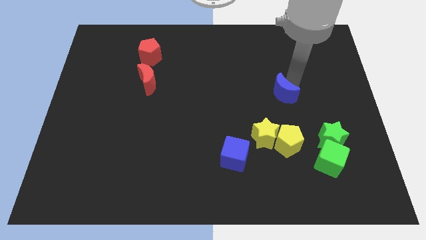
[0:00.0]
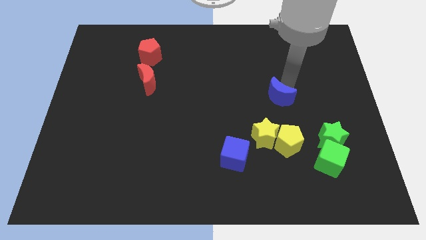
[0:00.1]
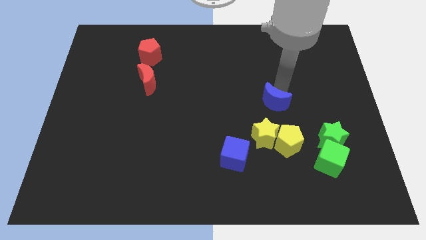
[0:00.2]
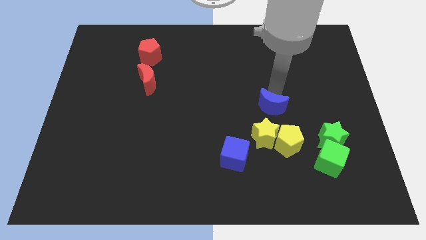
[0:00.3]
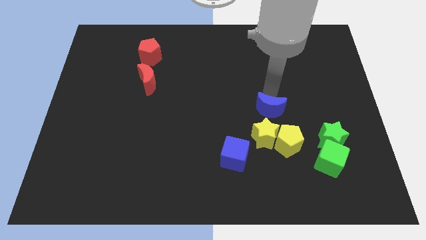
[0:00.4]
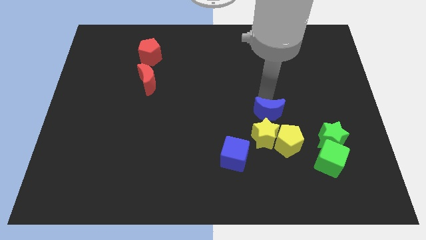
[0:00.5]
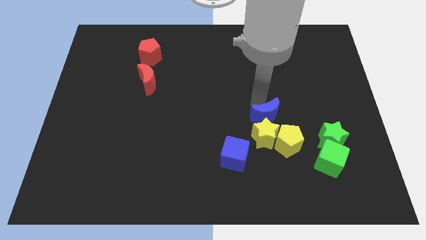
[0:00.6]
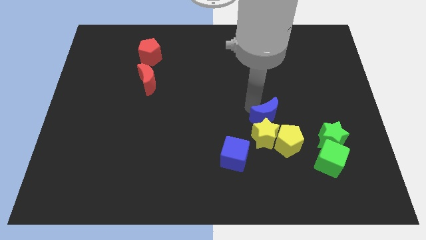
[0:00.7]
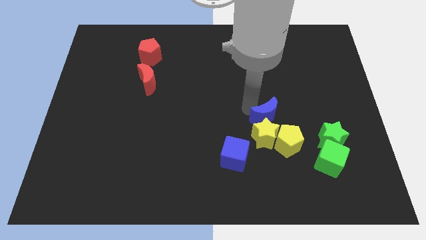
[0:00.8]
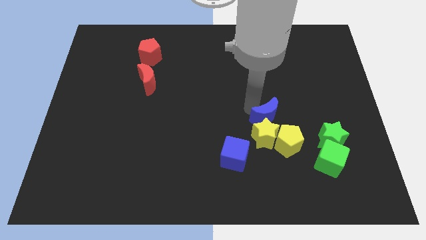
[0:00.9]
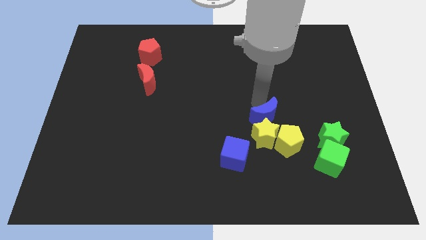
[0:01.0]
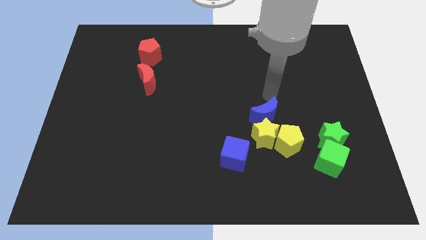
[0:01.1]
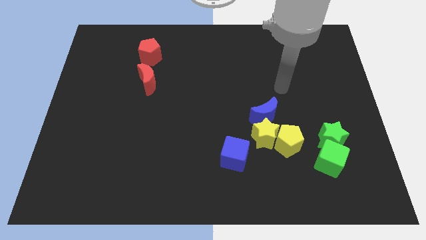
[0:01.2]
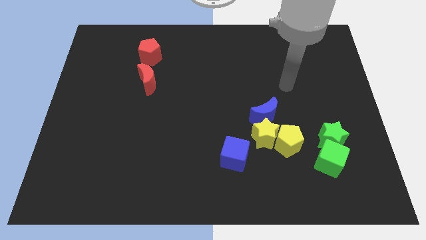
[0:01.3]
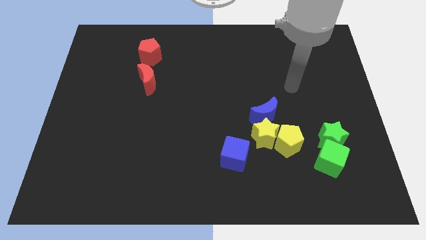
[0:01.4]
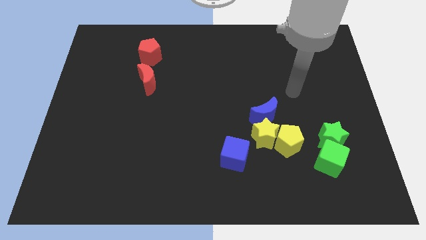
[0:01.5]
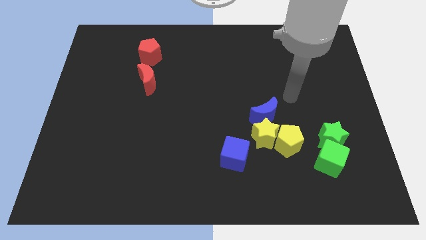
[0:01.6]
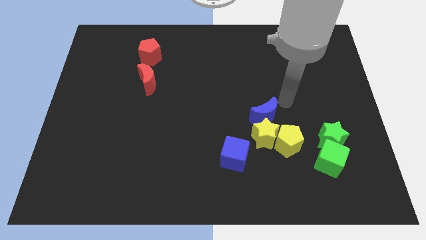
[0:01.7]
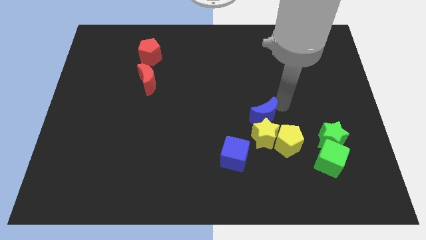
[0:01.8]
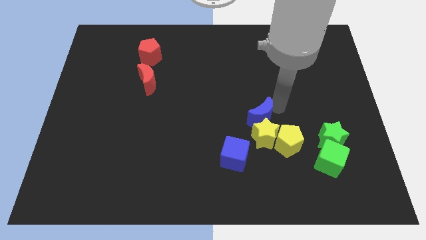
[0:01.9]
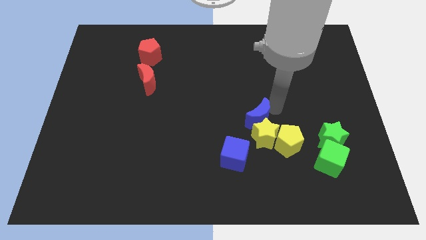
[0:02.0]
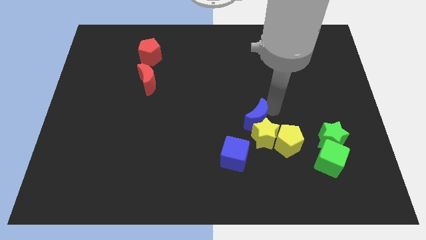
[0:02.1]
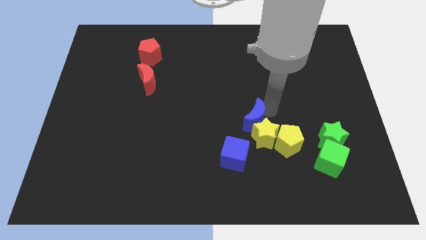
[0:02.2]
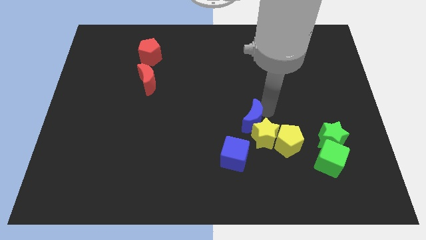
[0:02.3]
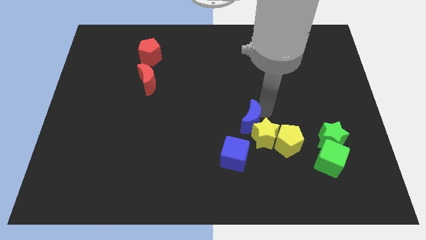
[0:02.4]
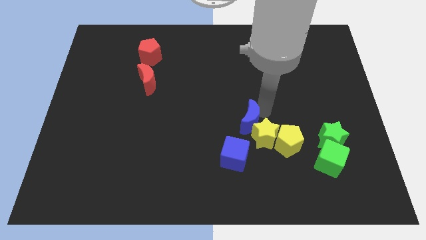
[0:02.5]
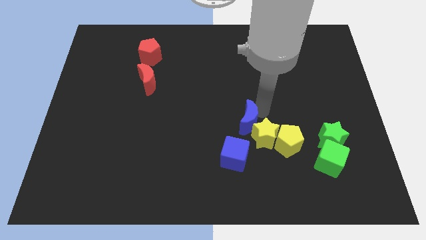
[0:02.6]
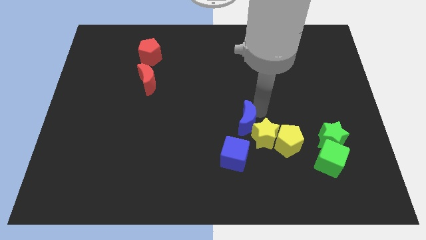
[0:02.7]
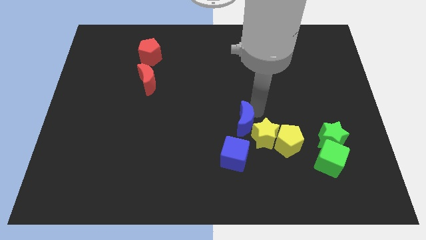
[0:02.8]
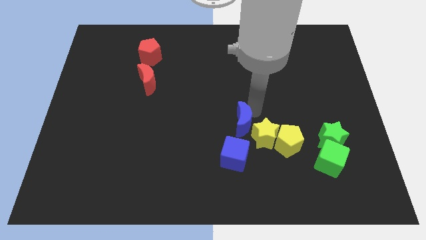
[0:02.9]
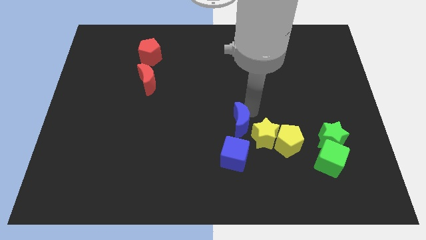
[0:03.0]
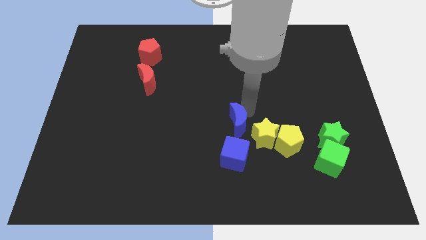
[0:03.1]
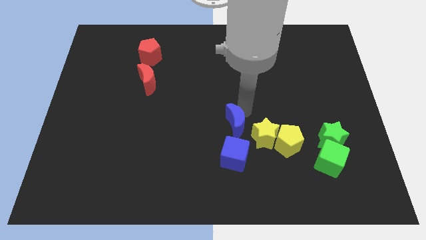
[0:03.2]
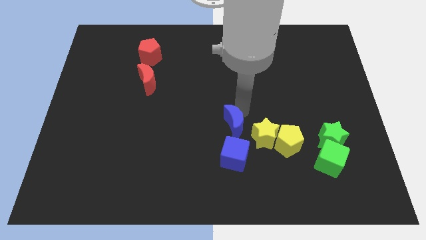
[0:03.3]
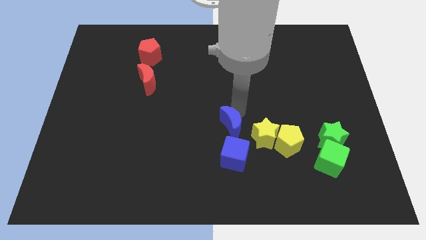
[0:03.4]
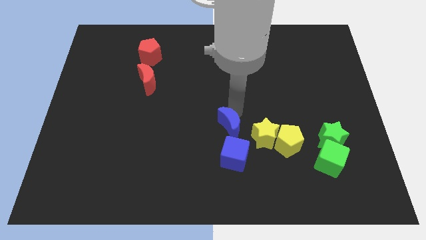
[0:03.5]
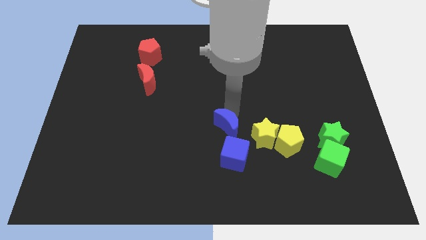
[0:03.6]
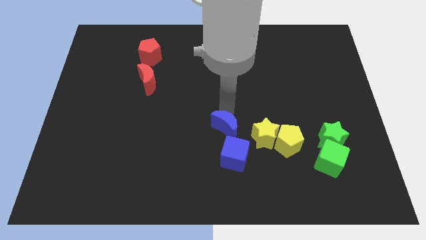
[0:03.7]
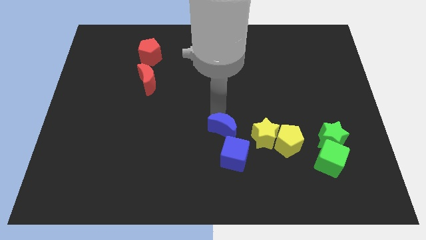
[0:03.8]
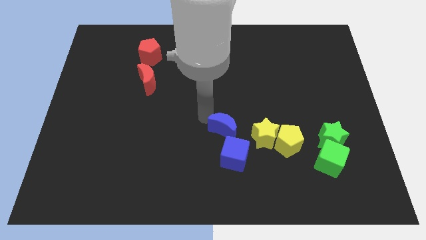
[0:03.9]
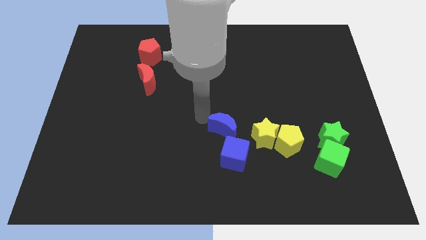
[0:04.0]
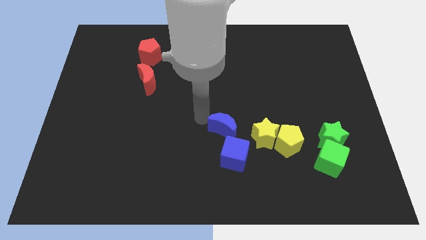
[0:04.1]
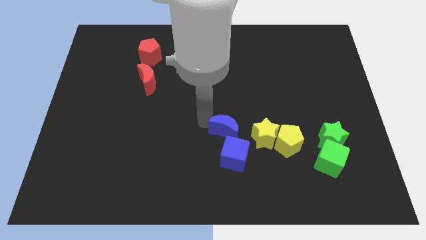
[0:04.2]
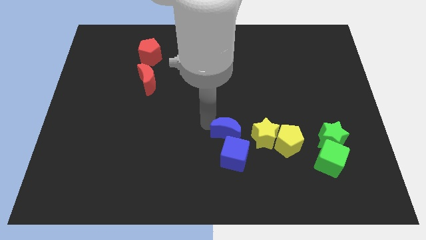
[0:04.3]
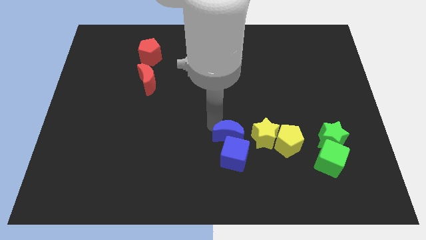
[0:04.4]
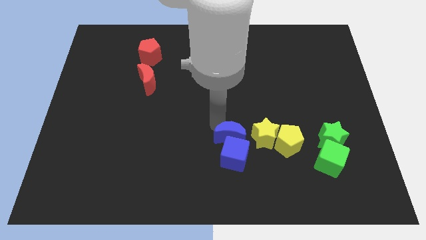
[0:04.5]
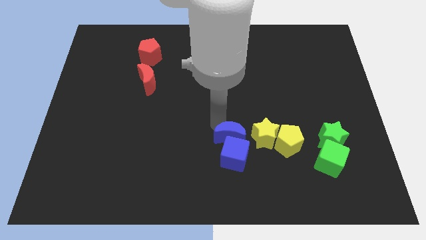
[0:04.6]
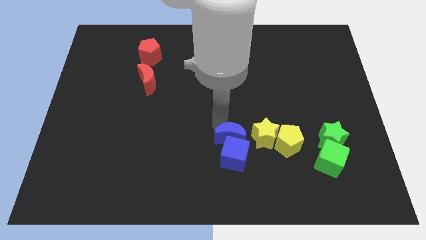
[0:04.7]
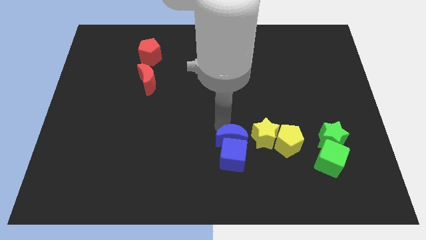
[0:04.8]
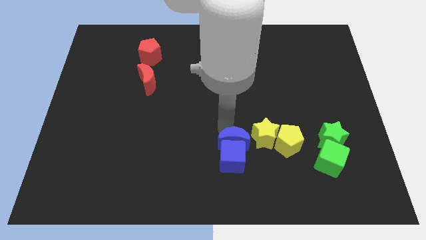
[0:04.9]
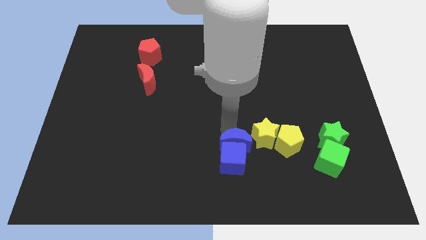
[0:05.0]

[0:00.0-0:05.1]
push the blue crescent into the blue cube

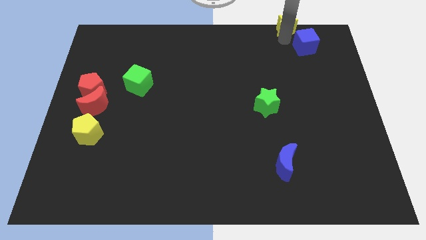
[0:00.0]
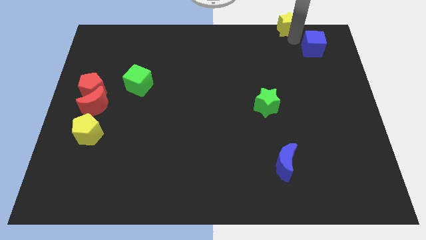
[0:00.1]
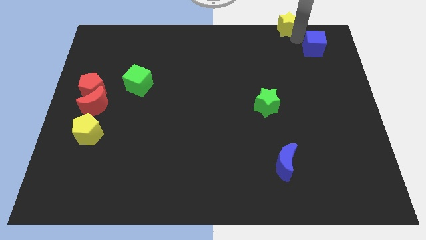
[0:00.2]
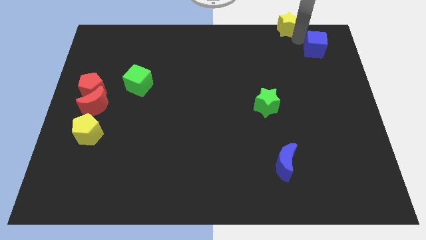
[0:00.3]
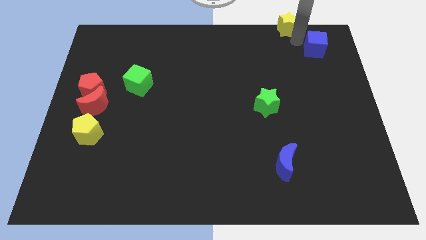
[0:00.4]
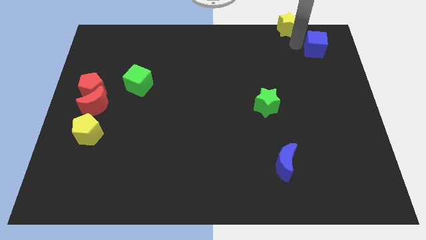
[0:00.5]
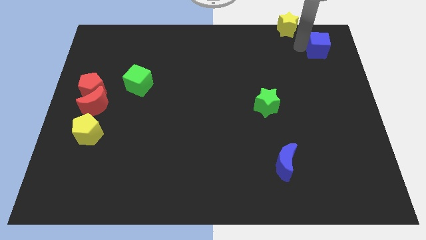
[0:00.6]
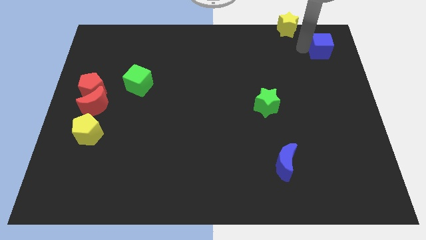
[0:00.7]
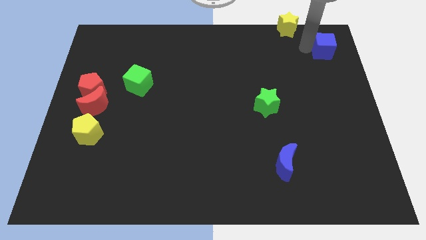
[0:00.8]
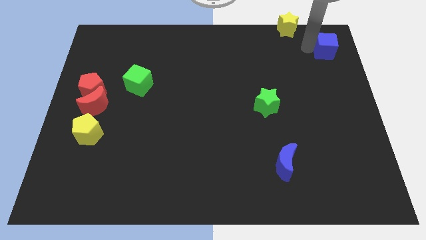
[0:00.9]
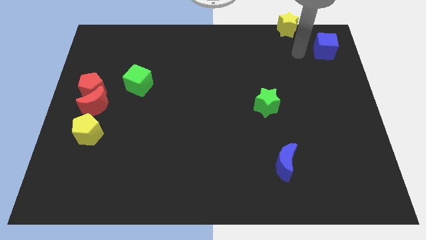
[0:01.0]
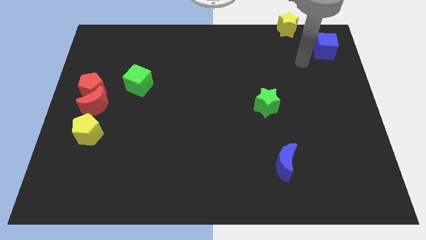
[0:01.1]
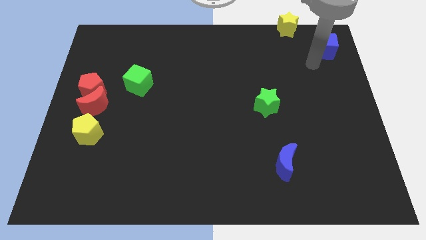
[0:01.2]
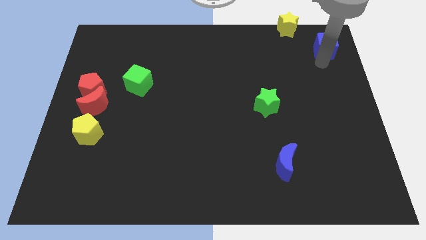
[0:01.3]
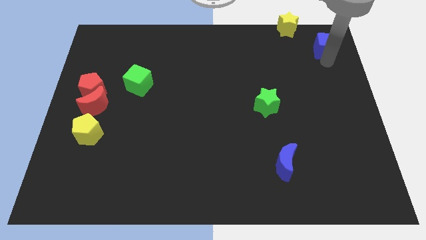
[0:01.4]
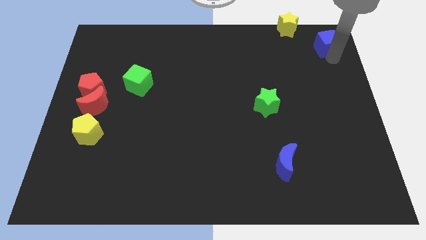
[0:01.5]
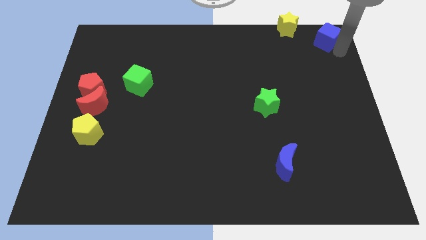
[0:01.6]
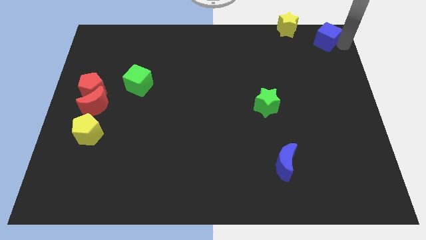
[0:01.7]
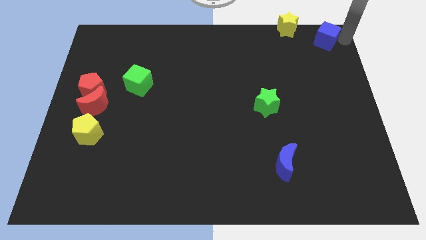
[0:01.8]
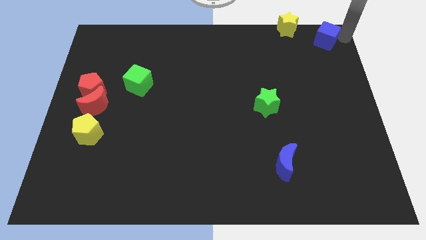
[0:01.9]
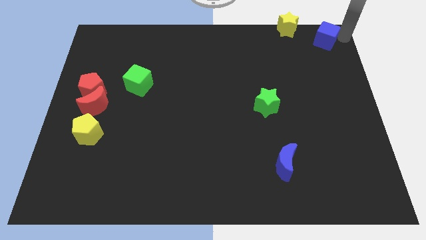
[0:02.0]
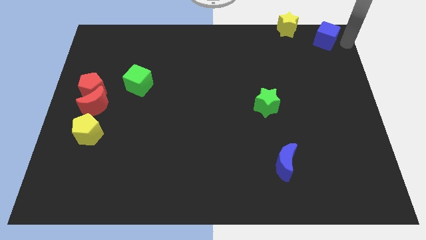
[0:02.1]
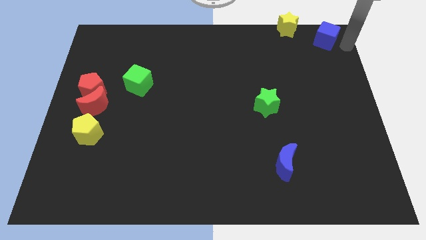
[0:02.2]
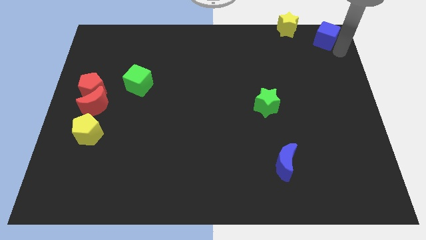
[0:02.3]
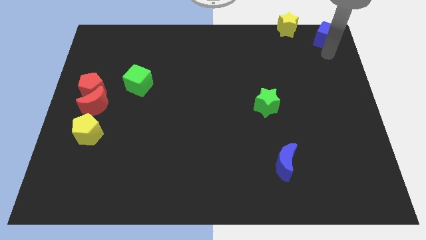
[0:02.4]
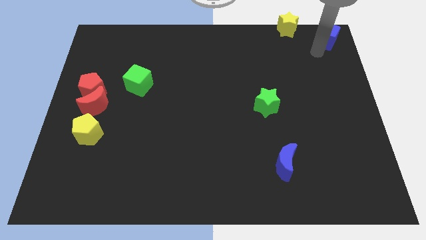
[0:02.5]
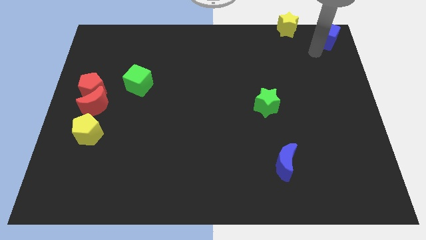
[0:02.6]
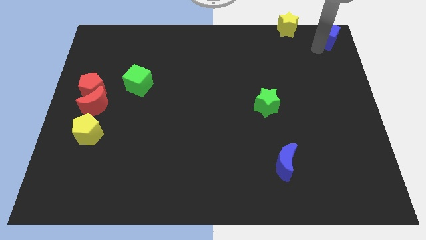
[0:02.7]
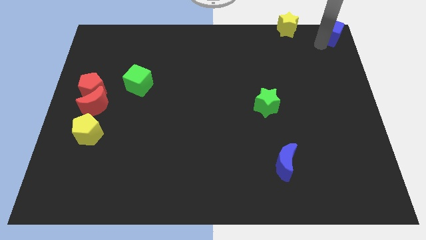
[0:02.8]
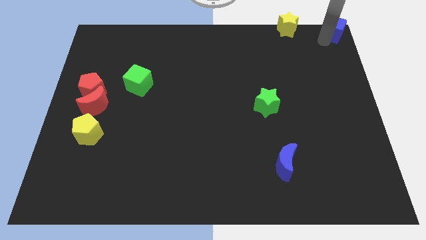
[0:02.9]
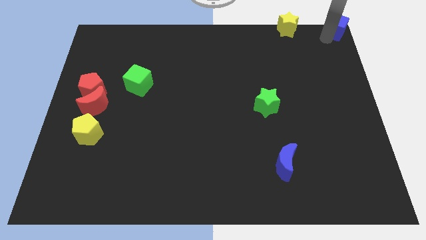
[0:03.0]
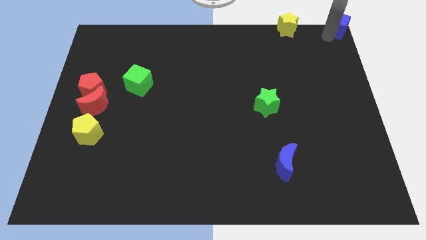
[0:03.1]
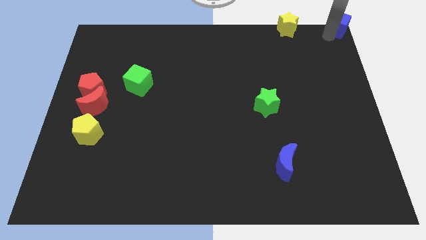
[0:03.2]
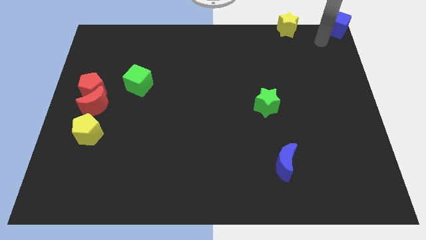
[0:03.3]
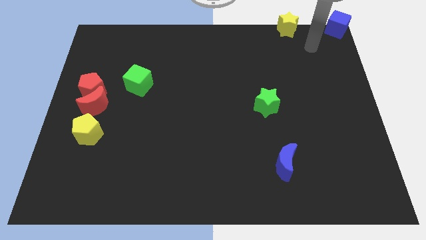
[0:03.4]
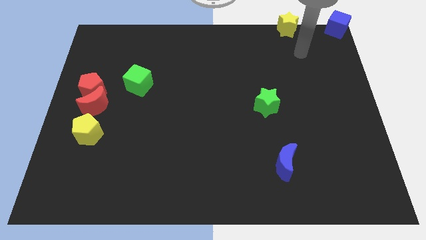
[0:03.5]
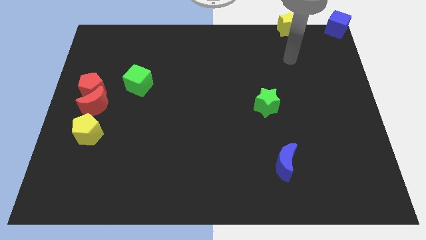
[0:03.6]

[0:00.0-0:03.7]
place the blue cube at the top right corner of the board

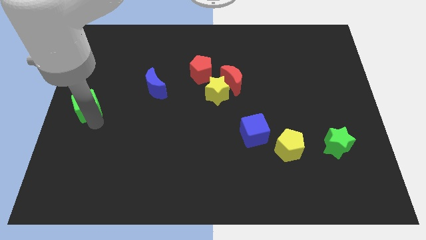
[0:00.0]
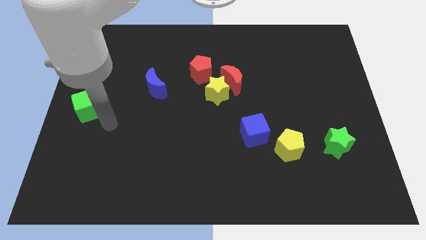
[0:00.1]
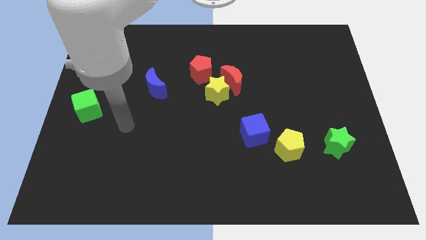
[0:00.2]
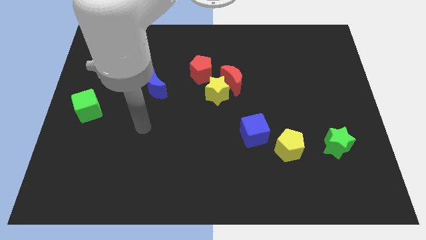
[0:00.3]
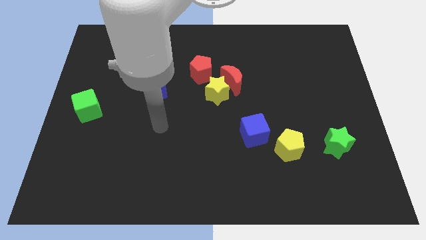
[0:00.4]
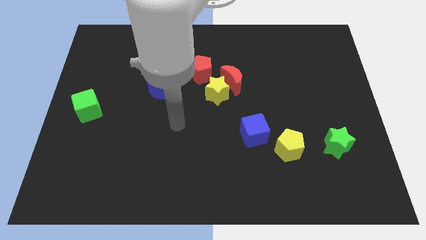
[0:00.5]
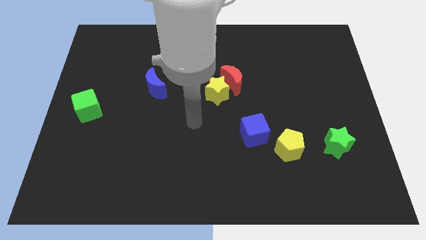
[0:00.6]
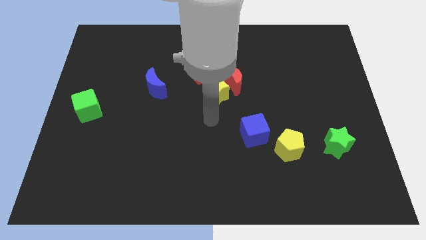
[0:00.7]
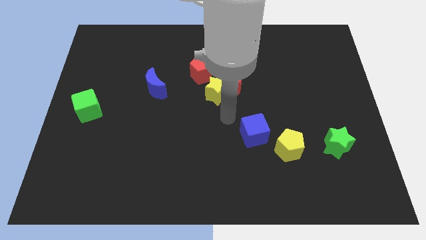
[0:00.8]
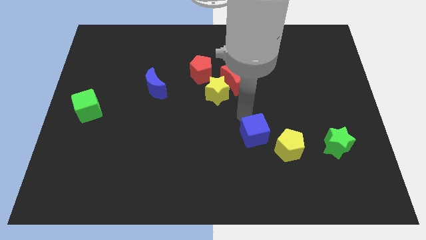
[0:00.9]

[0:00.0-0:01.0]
place arm in the center
